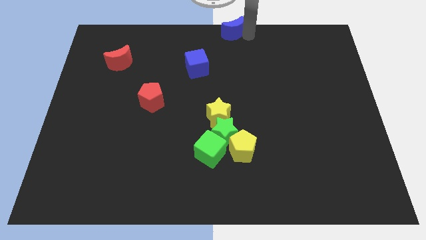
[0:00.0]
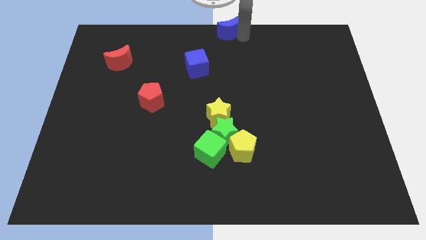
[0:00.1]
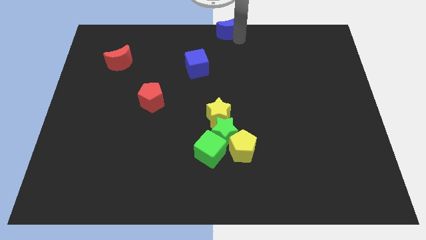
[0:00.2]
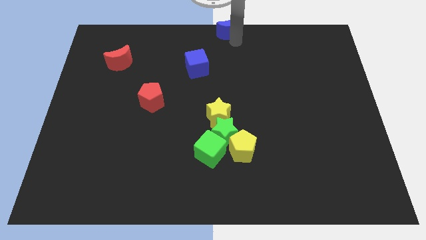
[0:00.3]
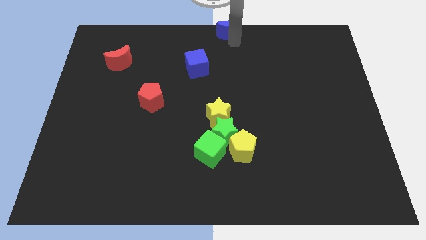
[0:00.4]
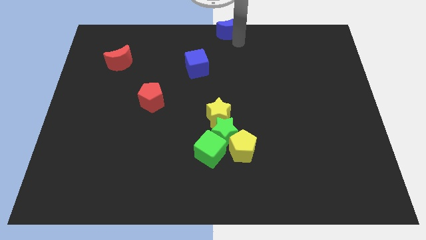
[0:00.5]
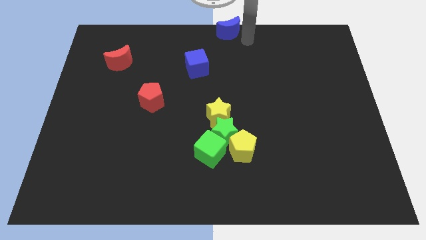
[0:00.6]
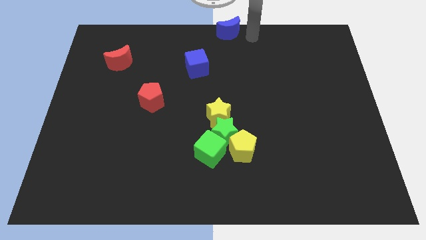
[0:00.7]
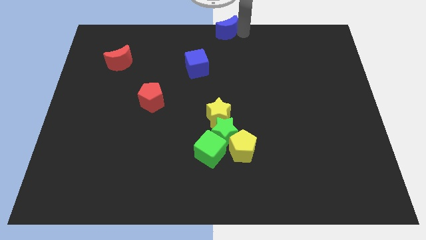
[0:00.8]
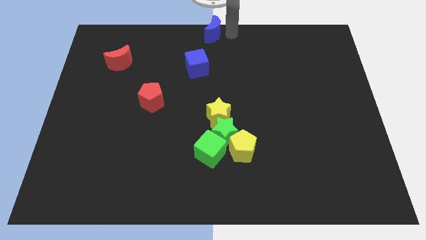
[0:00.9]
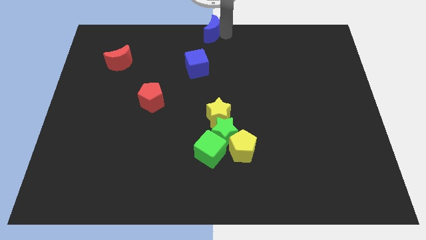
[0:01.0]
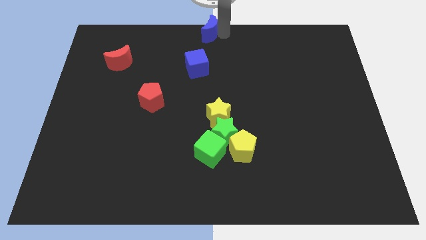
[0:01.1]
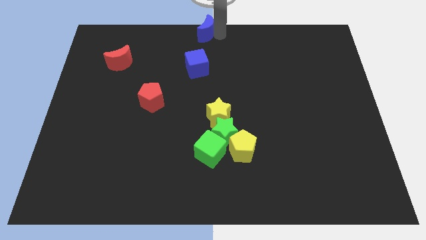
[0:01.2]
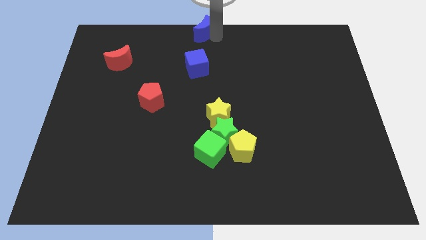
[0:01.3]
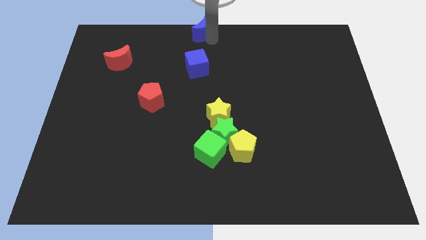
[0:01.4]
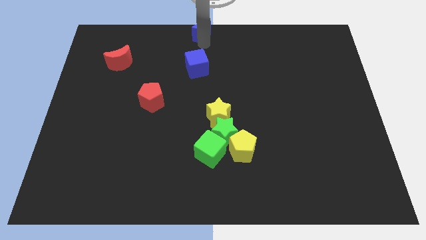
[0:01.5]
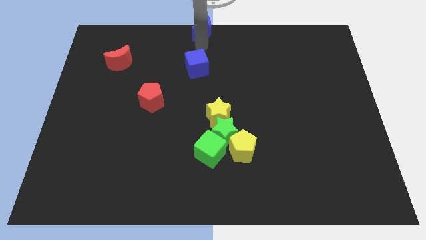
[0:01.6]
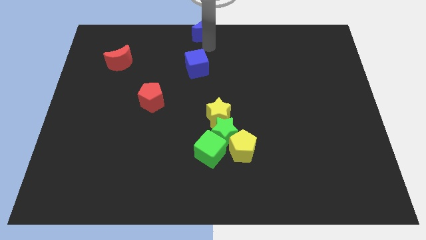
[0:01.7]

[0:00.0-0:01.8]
place the blue moon above the blue cube

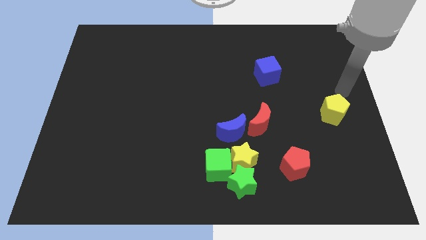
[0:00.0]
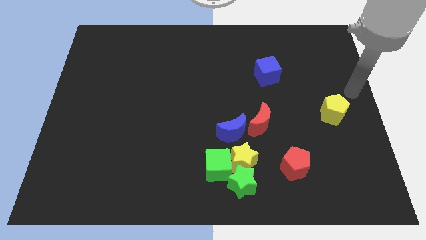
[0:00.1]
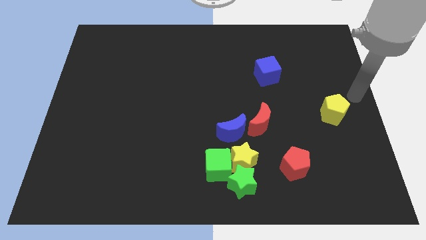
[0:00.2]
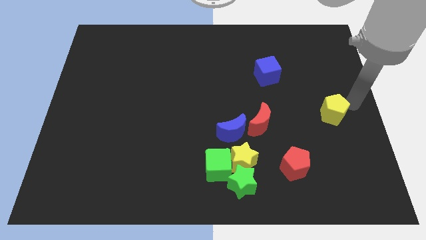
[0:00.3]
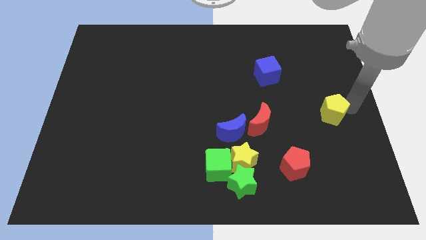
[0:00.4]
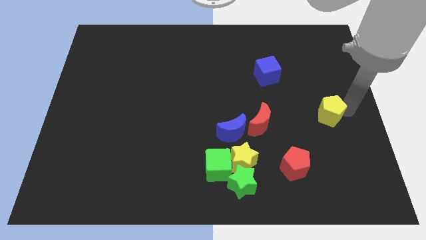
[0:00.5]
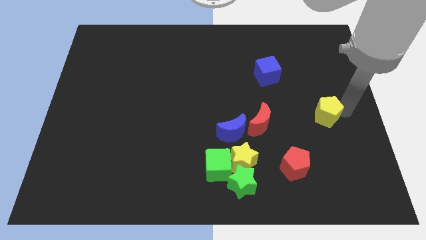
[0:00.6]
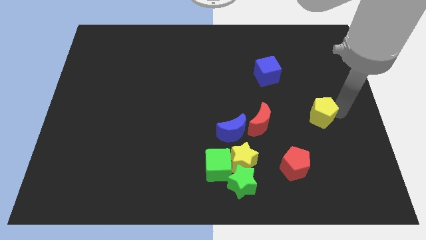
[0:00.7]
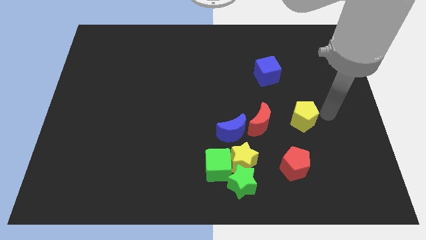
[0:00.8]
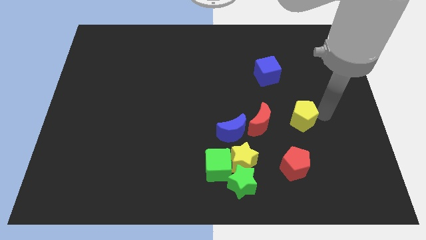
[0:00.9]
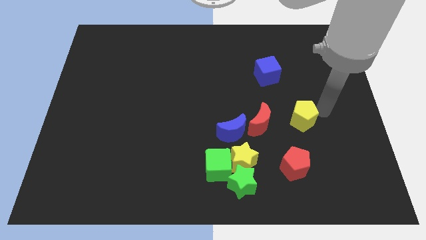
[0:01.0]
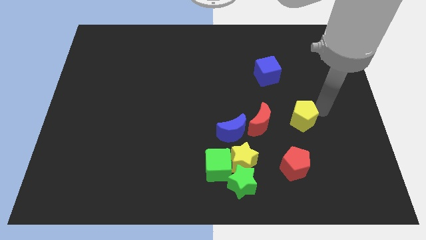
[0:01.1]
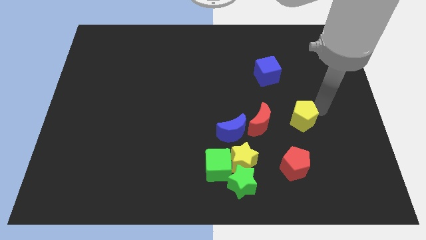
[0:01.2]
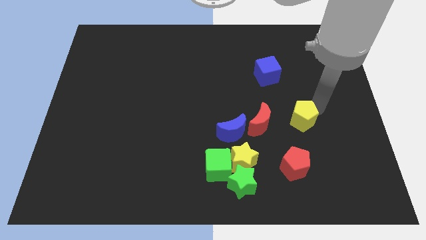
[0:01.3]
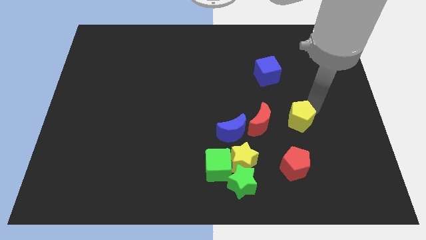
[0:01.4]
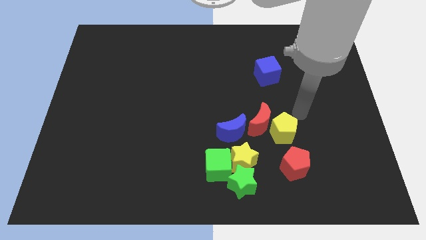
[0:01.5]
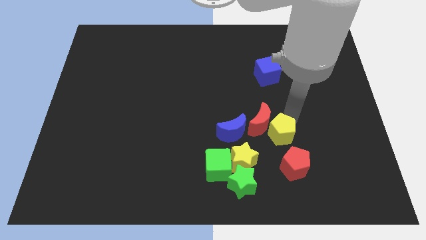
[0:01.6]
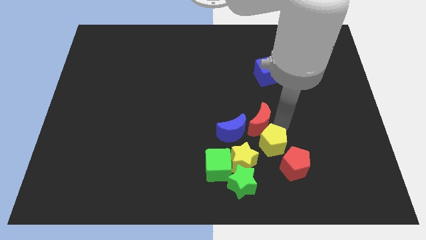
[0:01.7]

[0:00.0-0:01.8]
place the yellow pentagon in between two red blocks

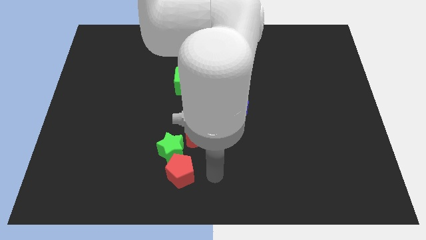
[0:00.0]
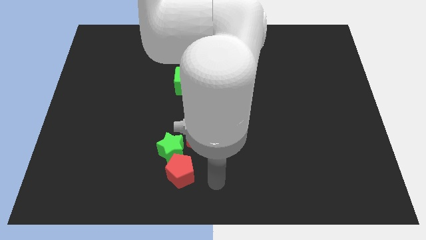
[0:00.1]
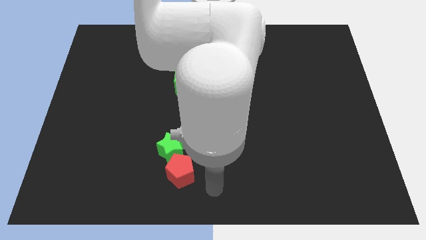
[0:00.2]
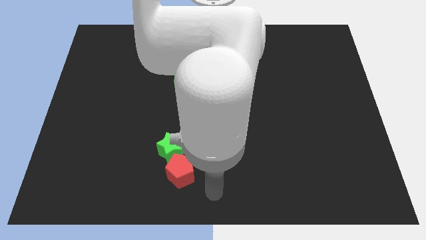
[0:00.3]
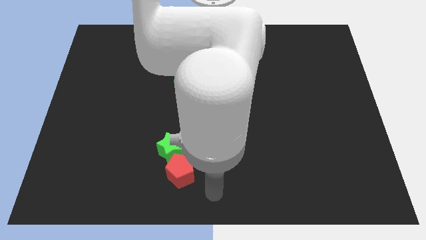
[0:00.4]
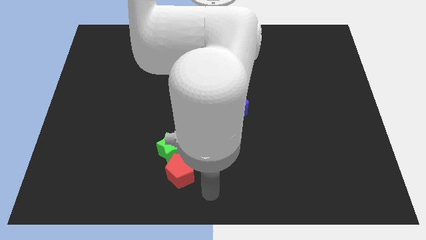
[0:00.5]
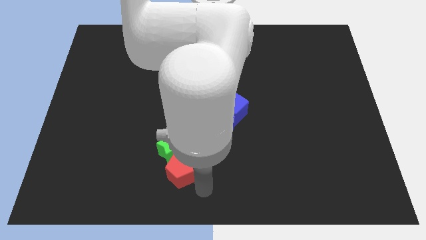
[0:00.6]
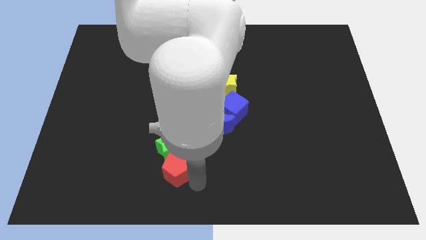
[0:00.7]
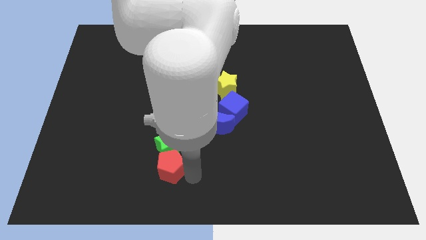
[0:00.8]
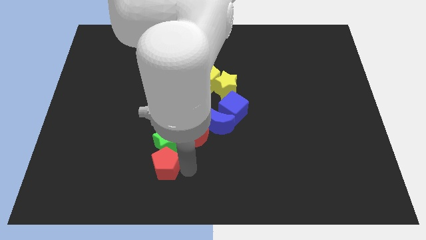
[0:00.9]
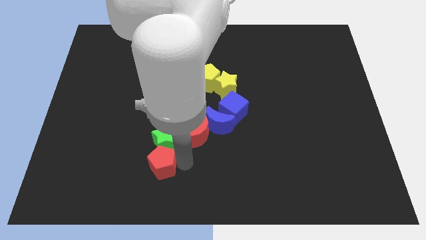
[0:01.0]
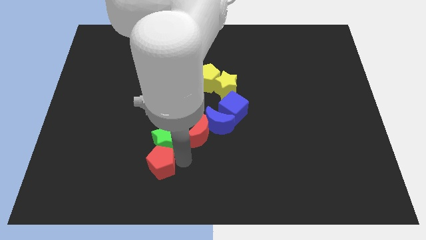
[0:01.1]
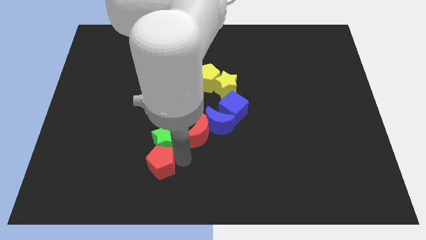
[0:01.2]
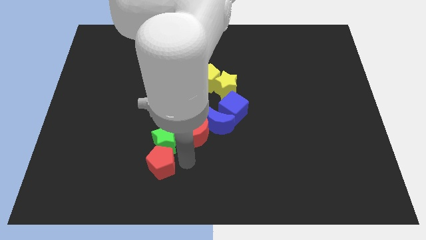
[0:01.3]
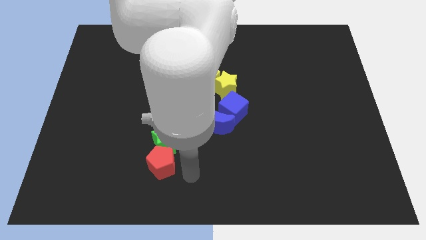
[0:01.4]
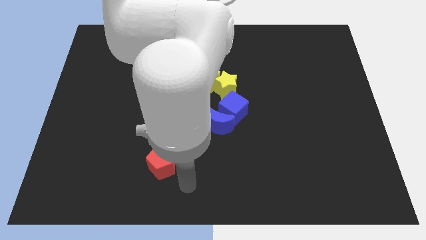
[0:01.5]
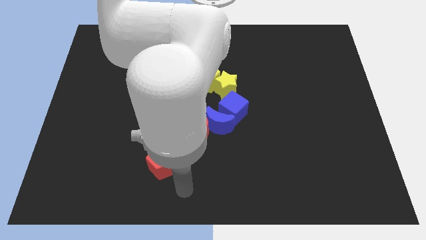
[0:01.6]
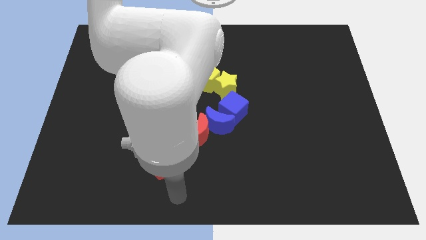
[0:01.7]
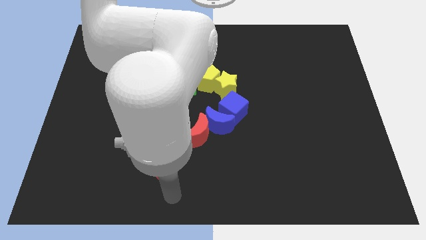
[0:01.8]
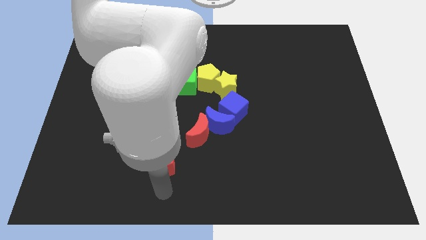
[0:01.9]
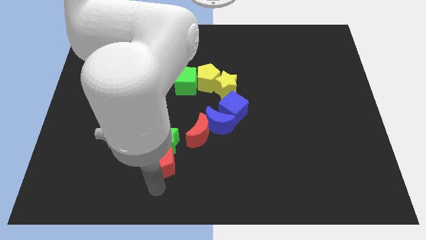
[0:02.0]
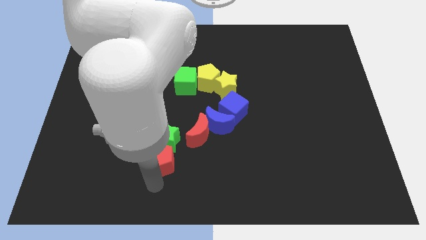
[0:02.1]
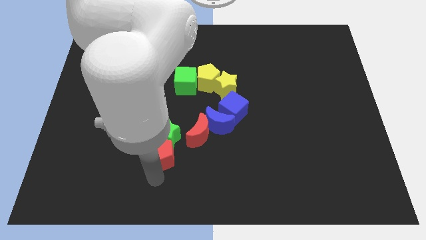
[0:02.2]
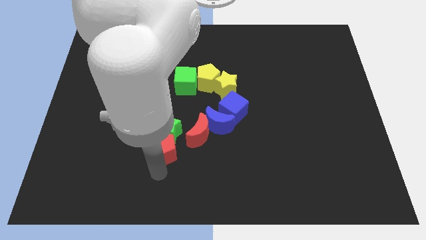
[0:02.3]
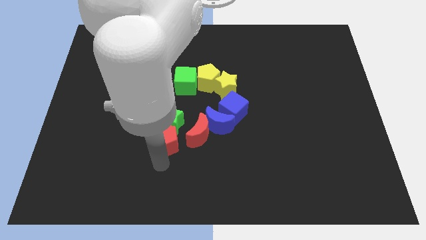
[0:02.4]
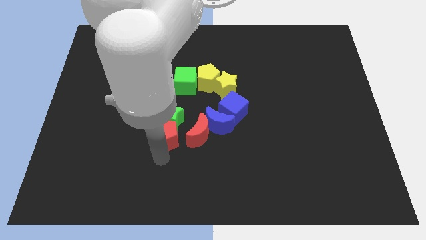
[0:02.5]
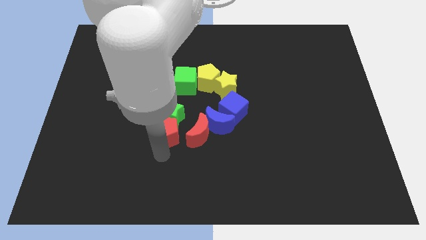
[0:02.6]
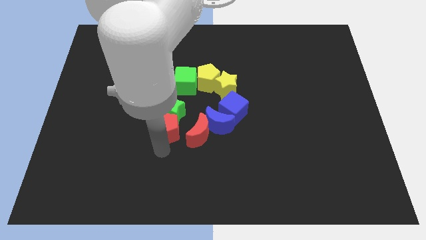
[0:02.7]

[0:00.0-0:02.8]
push the red pentagon to the bottom of green star

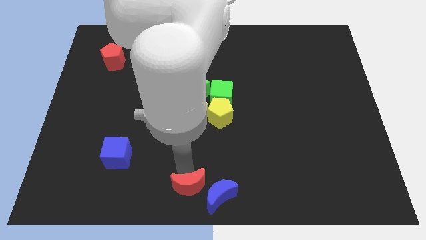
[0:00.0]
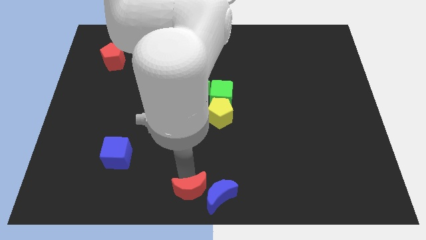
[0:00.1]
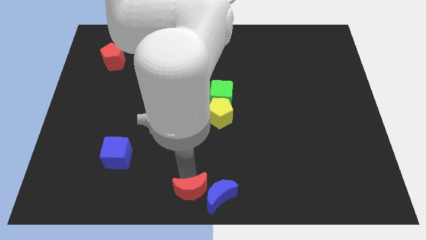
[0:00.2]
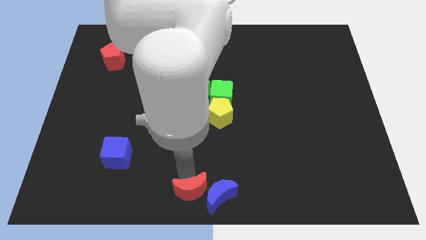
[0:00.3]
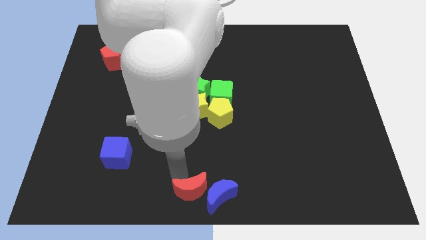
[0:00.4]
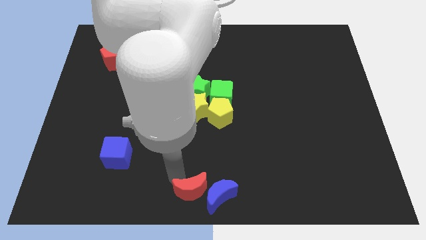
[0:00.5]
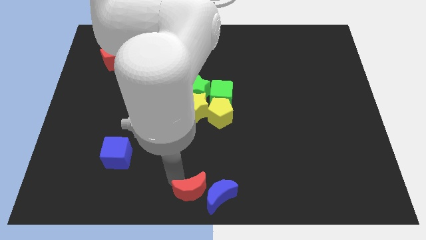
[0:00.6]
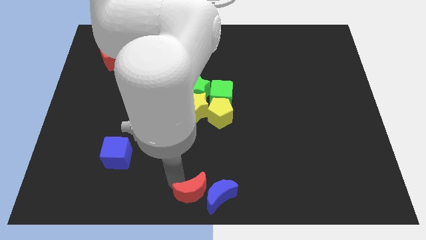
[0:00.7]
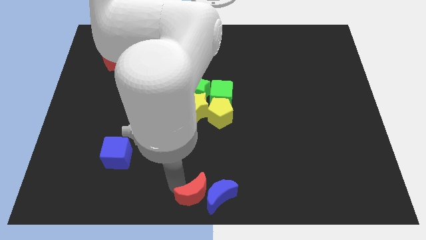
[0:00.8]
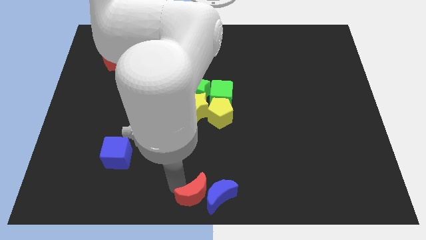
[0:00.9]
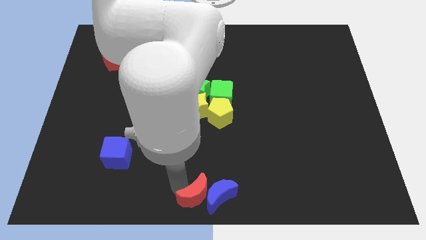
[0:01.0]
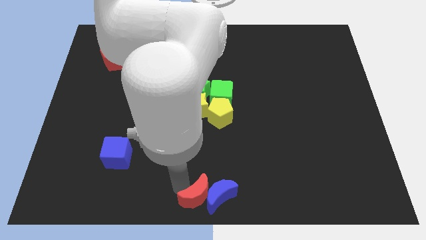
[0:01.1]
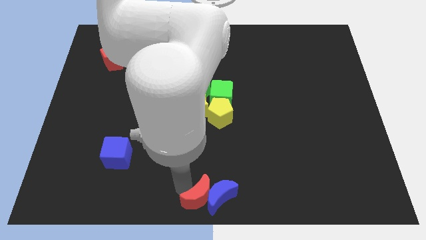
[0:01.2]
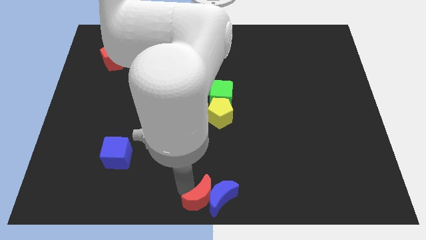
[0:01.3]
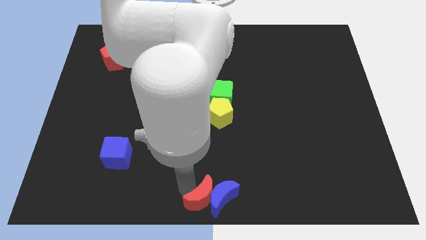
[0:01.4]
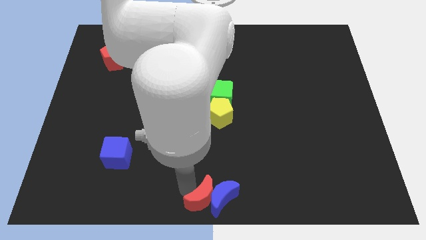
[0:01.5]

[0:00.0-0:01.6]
move the red moon into the blue moon

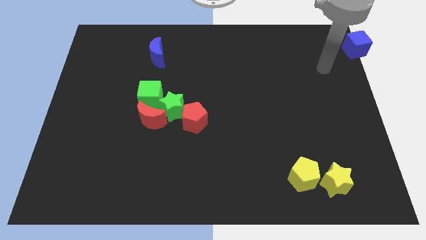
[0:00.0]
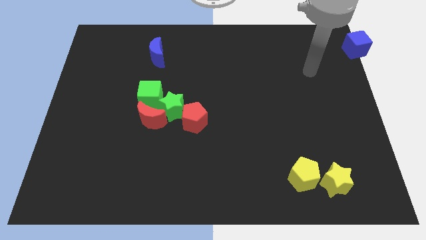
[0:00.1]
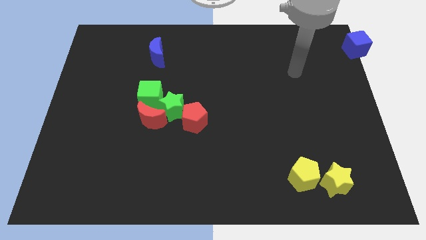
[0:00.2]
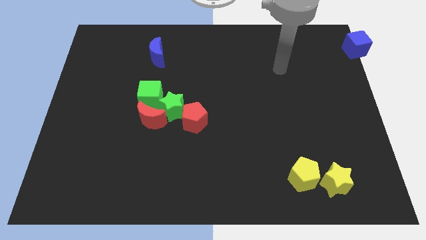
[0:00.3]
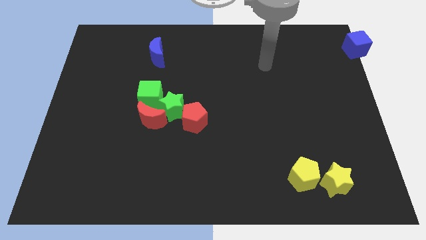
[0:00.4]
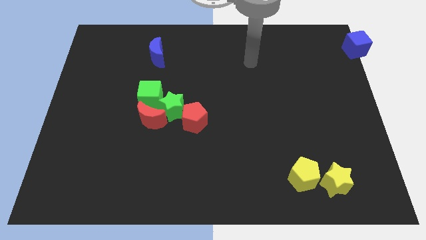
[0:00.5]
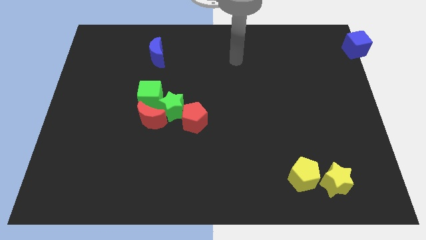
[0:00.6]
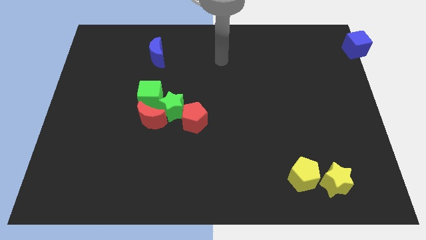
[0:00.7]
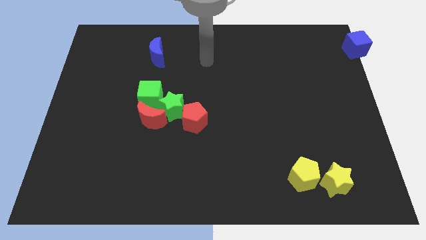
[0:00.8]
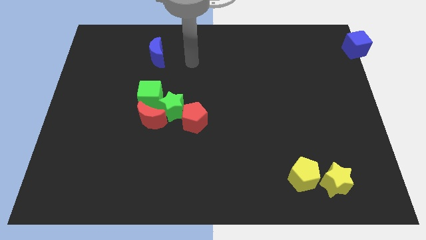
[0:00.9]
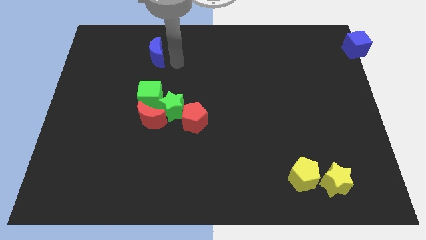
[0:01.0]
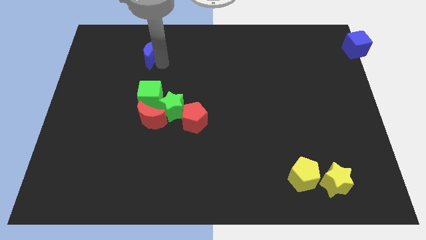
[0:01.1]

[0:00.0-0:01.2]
point your arm close to blue moon
